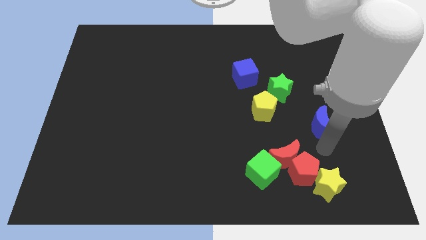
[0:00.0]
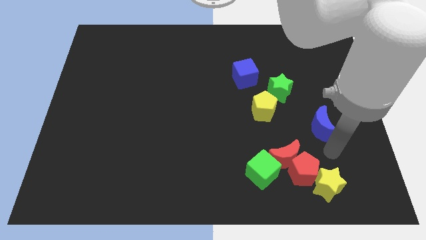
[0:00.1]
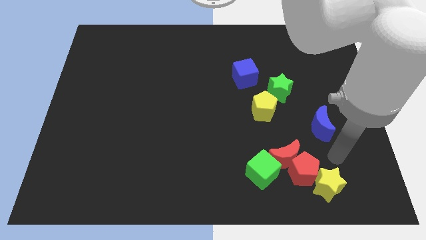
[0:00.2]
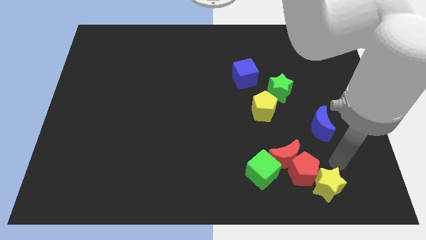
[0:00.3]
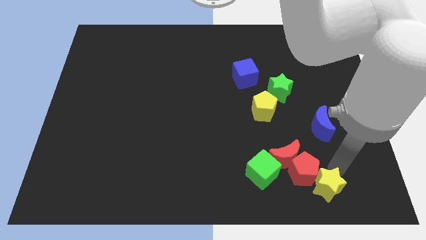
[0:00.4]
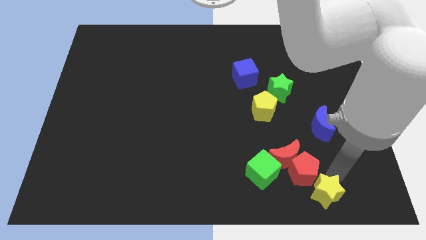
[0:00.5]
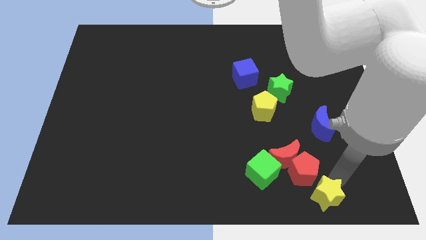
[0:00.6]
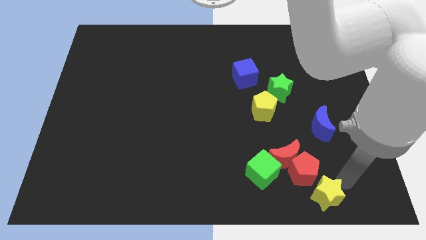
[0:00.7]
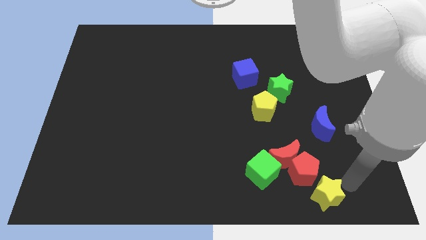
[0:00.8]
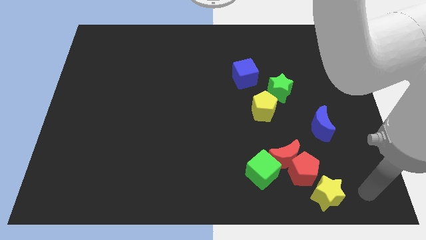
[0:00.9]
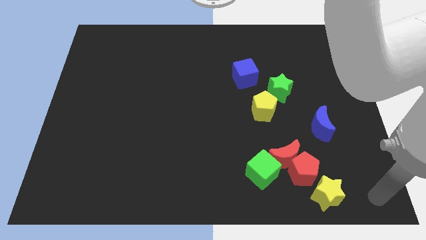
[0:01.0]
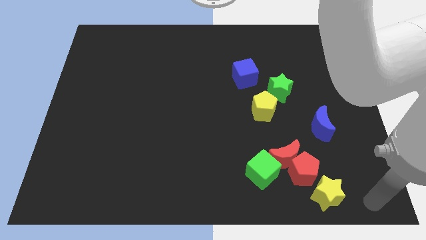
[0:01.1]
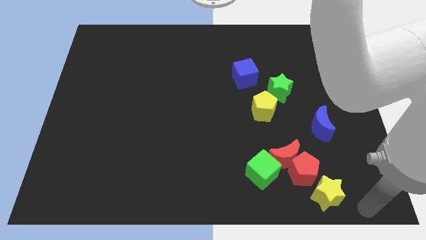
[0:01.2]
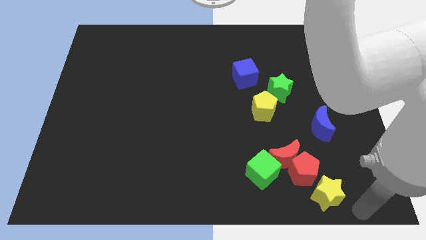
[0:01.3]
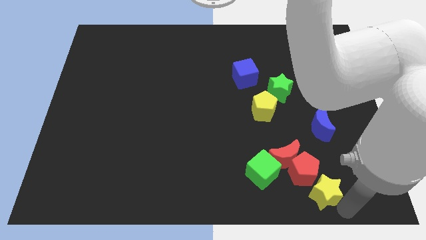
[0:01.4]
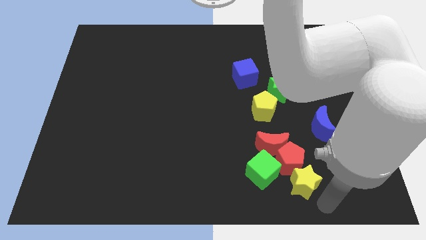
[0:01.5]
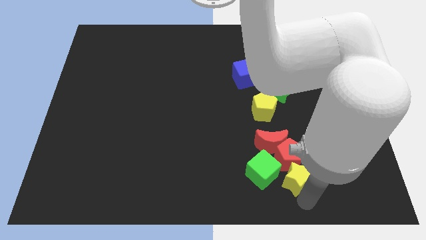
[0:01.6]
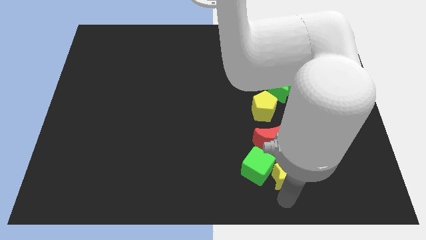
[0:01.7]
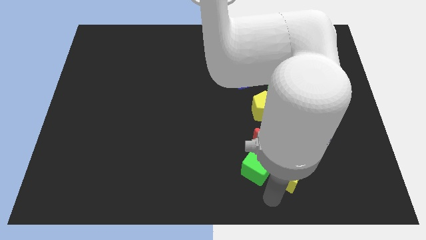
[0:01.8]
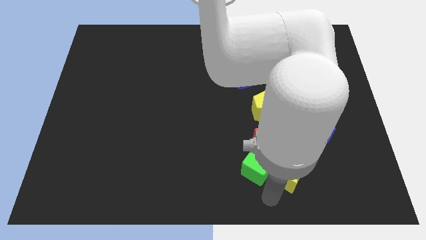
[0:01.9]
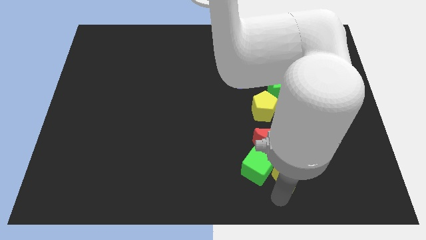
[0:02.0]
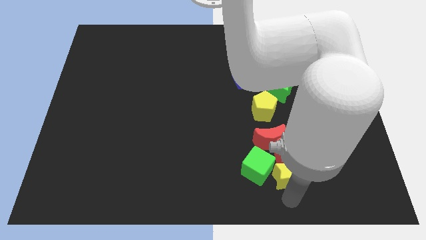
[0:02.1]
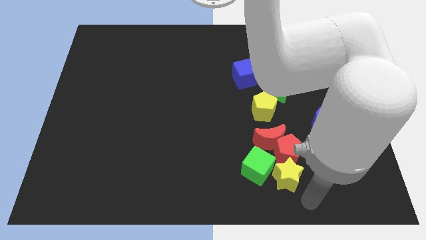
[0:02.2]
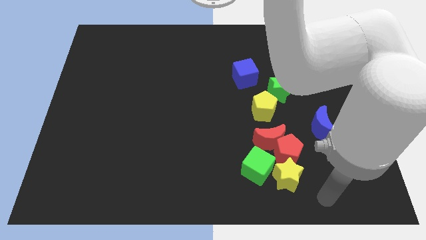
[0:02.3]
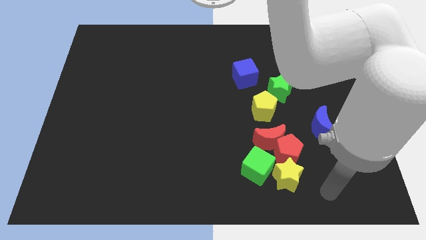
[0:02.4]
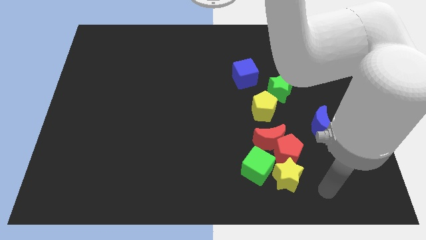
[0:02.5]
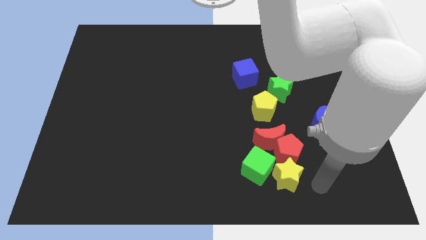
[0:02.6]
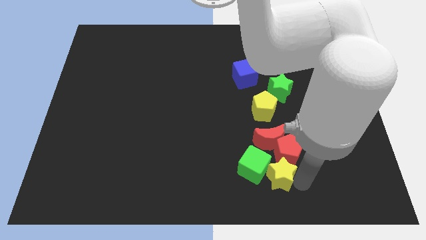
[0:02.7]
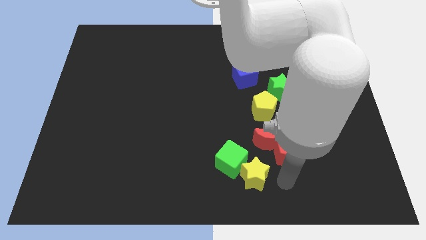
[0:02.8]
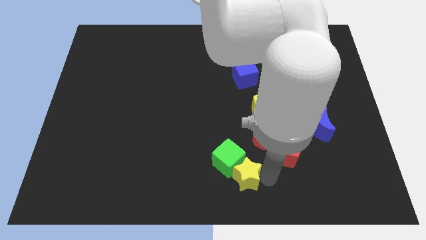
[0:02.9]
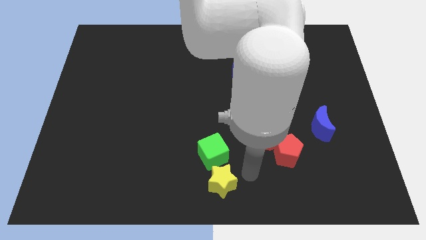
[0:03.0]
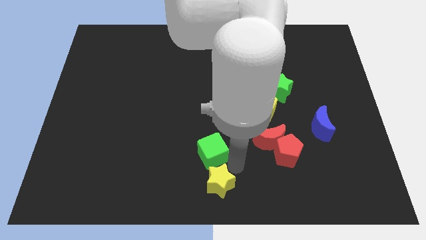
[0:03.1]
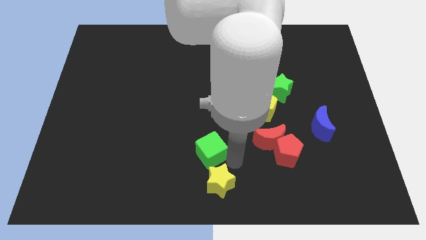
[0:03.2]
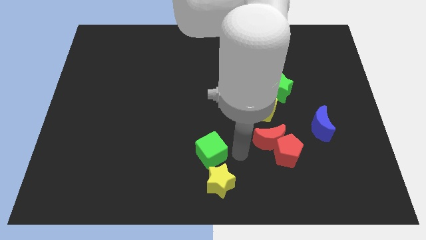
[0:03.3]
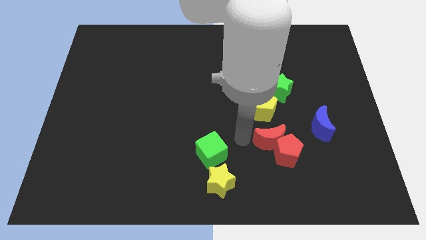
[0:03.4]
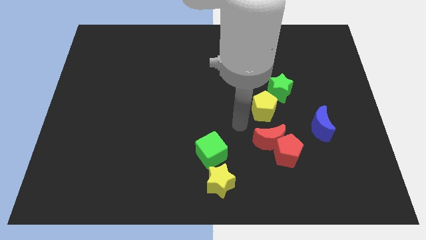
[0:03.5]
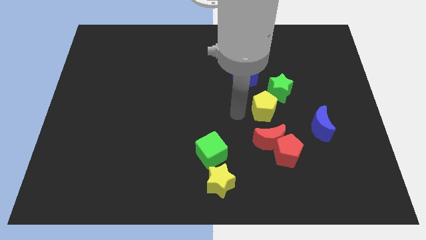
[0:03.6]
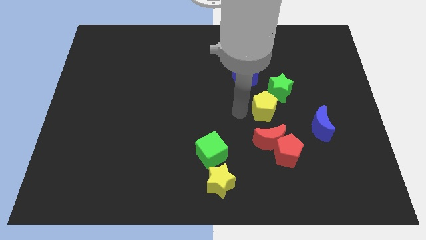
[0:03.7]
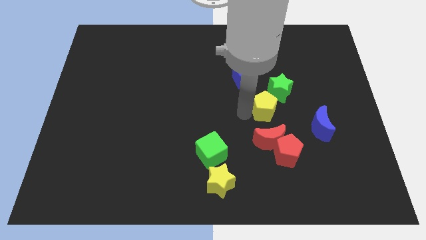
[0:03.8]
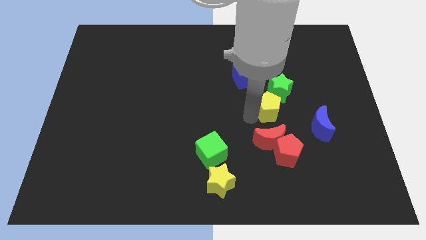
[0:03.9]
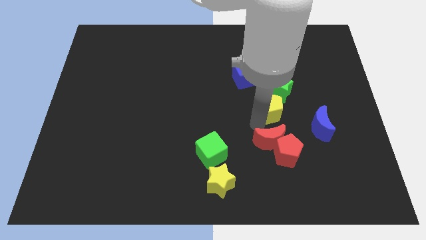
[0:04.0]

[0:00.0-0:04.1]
move the green cube and yellow star slightly left

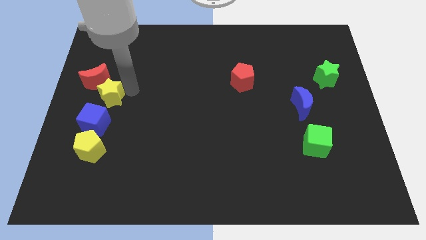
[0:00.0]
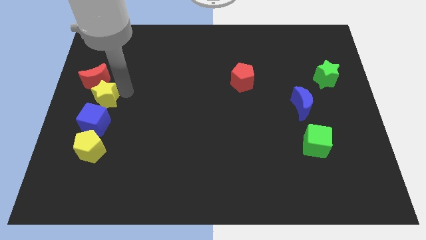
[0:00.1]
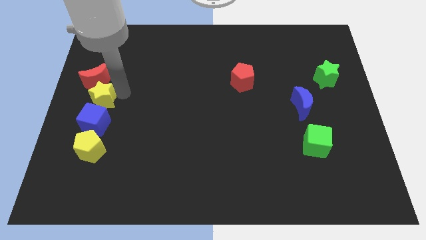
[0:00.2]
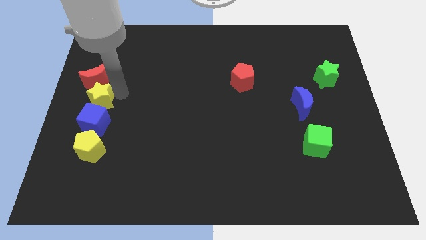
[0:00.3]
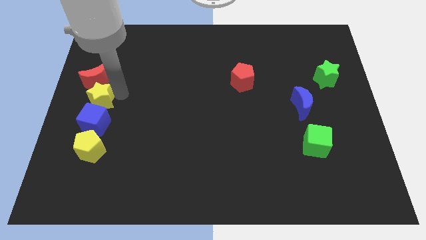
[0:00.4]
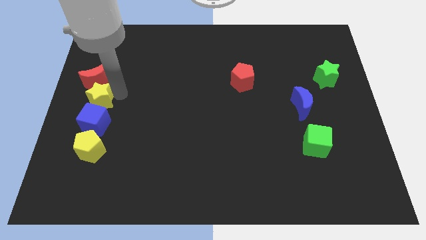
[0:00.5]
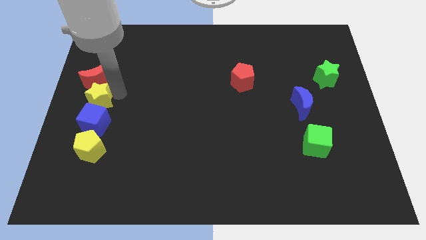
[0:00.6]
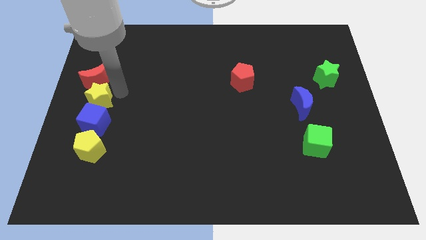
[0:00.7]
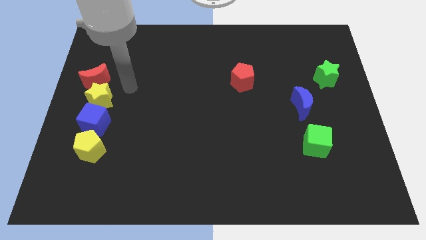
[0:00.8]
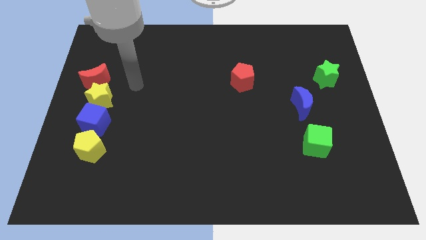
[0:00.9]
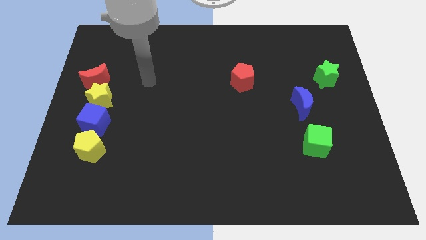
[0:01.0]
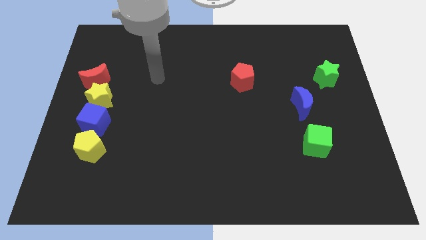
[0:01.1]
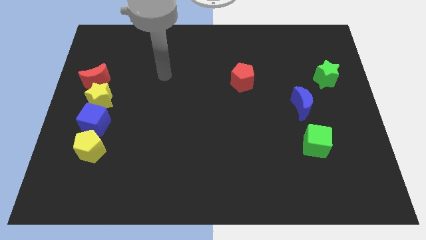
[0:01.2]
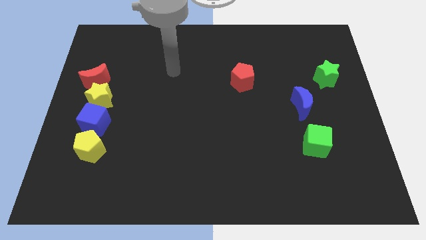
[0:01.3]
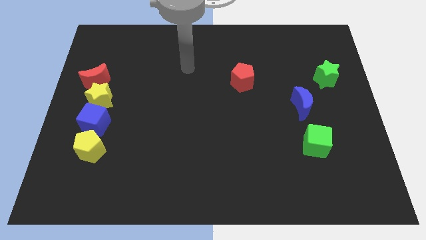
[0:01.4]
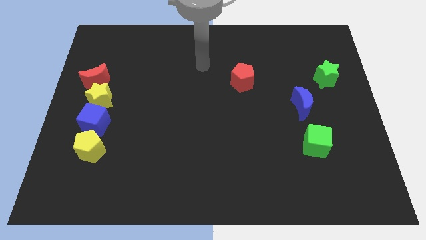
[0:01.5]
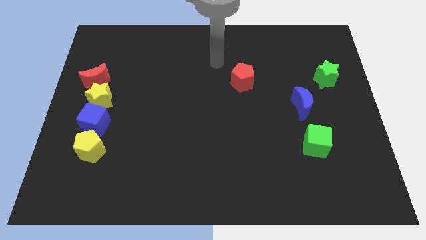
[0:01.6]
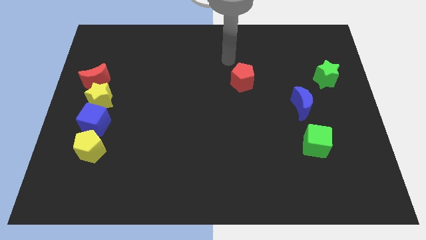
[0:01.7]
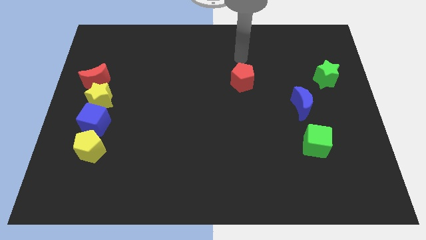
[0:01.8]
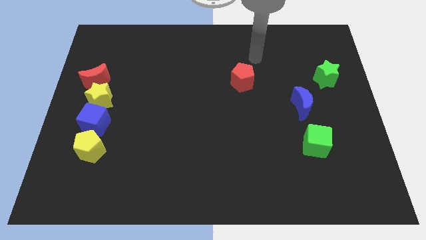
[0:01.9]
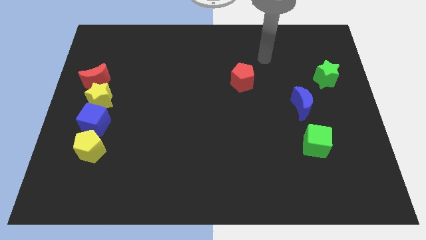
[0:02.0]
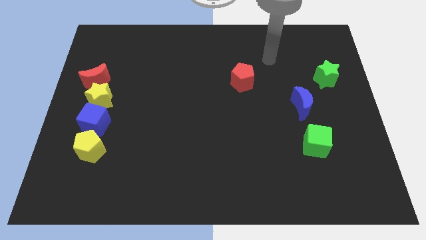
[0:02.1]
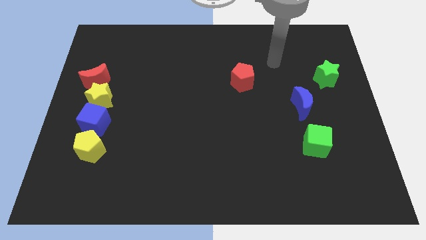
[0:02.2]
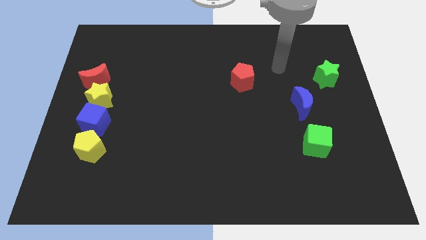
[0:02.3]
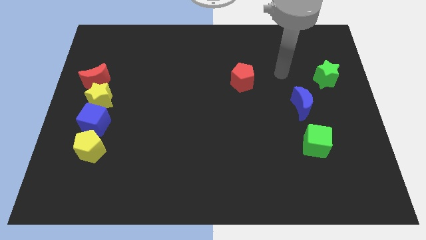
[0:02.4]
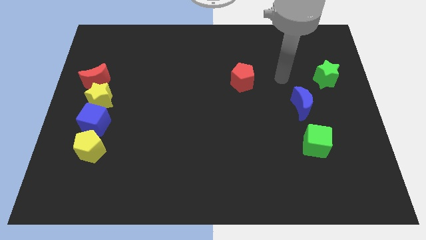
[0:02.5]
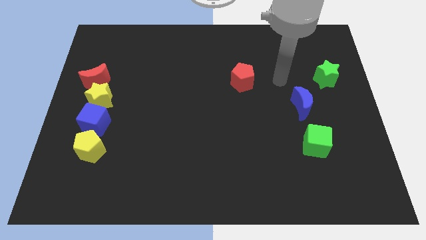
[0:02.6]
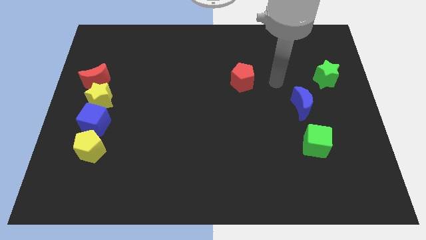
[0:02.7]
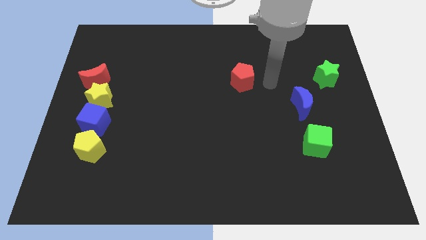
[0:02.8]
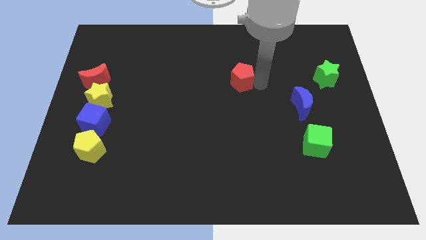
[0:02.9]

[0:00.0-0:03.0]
move the arm to the right of the red pentagon

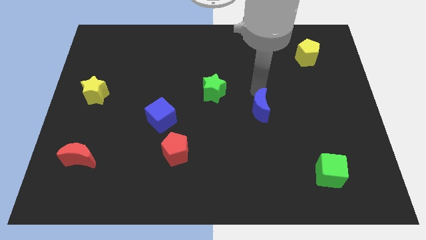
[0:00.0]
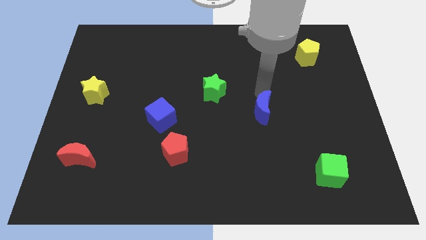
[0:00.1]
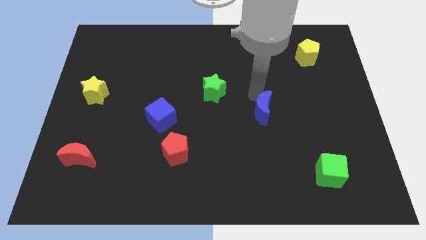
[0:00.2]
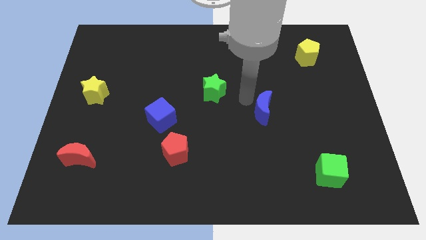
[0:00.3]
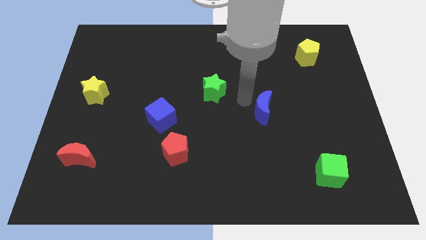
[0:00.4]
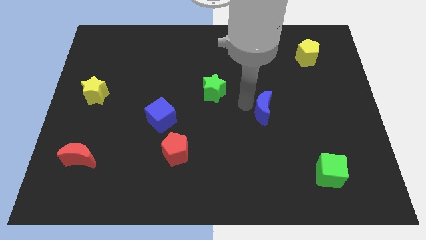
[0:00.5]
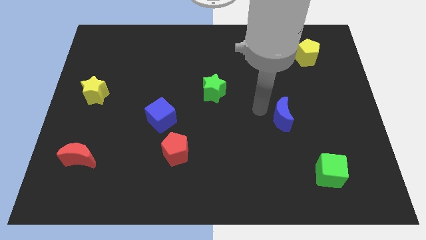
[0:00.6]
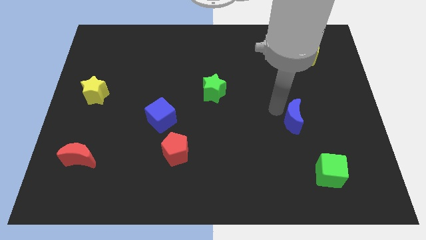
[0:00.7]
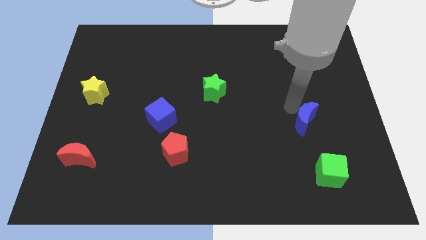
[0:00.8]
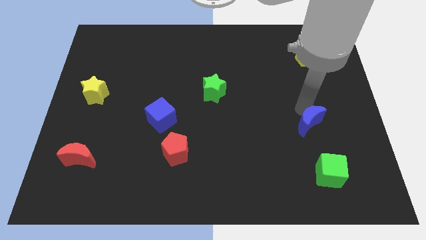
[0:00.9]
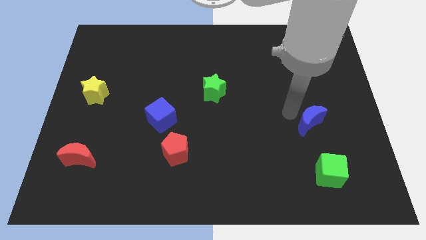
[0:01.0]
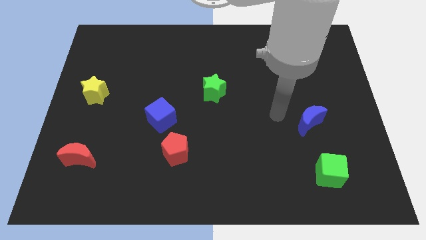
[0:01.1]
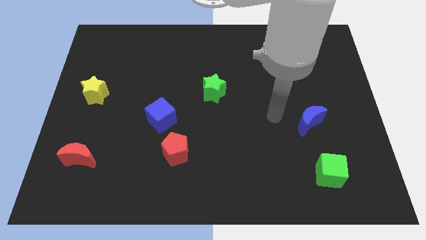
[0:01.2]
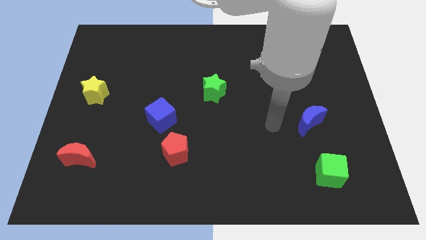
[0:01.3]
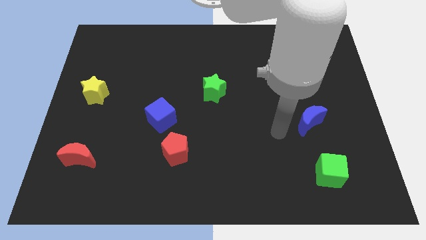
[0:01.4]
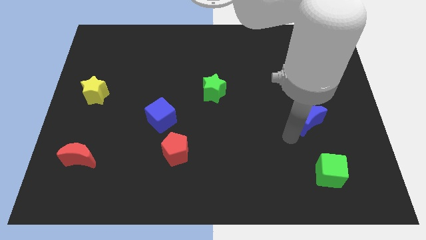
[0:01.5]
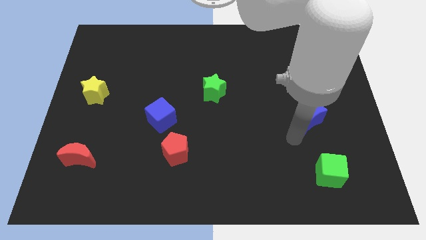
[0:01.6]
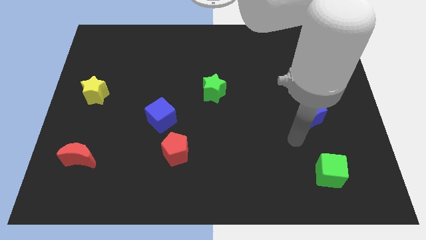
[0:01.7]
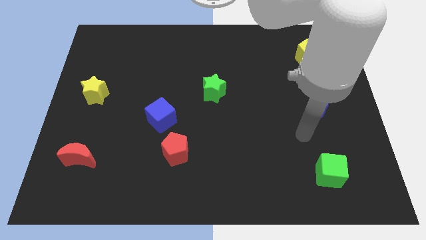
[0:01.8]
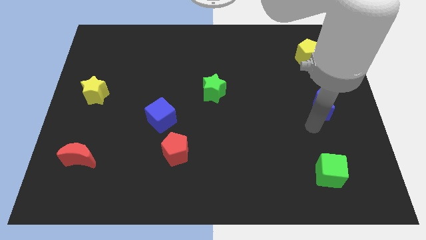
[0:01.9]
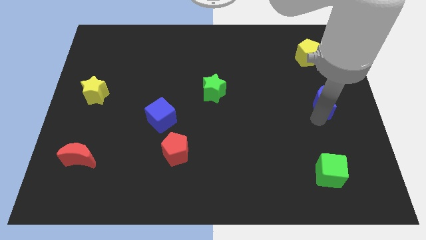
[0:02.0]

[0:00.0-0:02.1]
move the blue crescent to the top of the green cube
